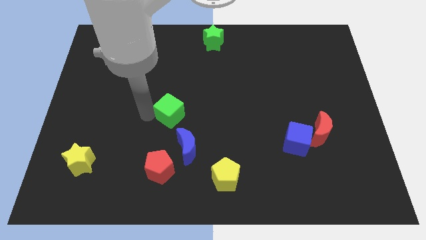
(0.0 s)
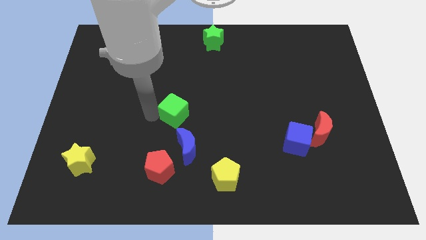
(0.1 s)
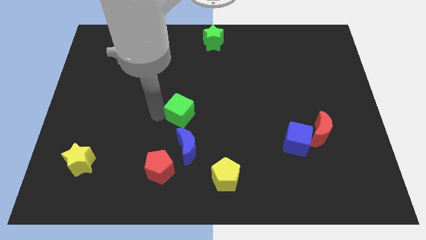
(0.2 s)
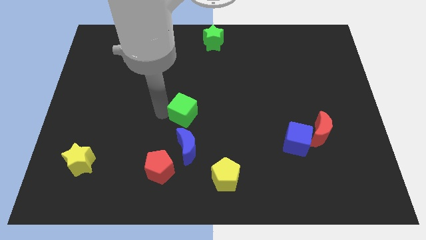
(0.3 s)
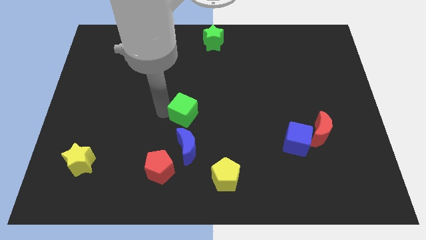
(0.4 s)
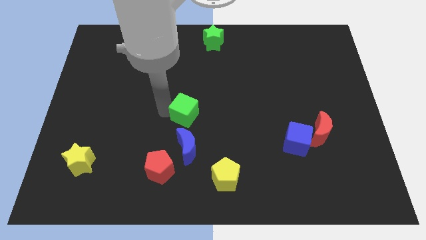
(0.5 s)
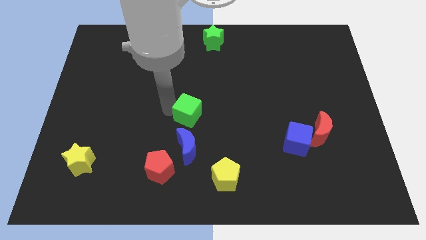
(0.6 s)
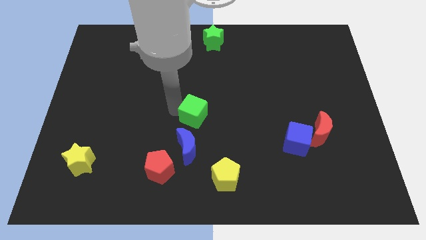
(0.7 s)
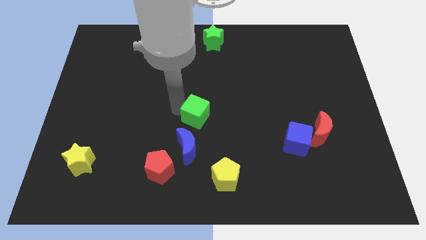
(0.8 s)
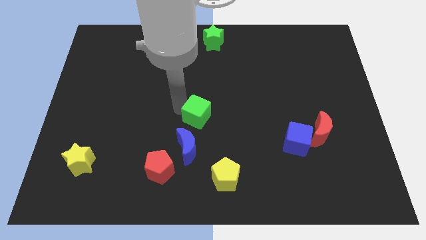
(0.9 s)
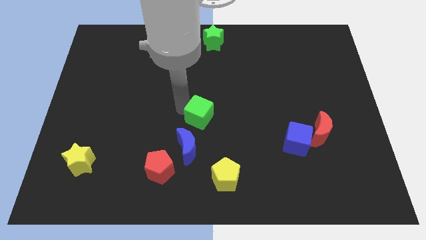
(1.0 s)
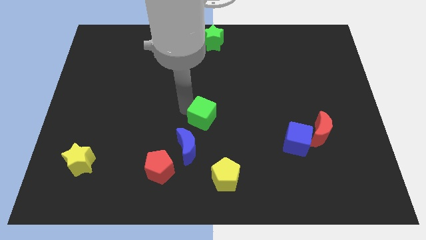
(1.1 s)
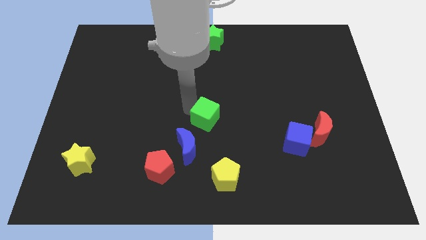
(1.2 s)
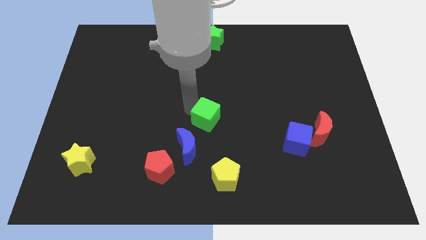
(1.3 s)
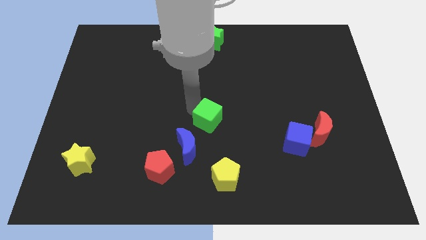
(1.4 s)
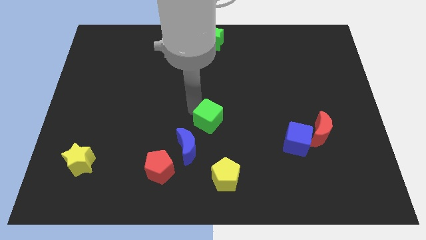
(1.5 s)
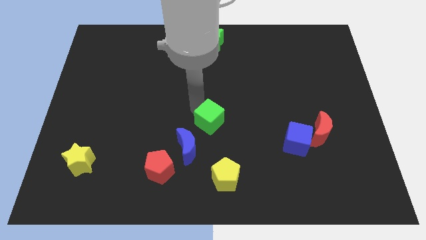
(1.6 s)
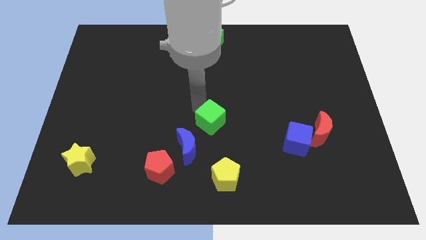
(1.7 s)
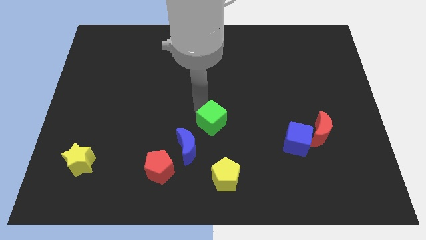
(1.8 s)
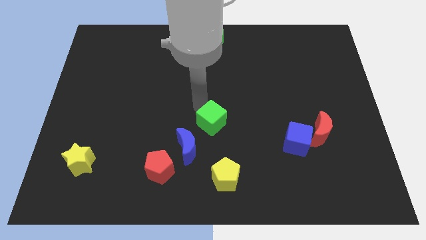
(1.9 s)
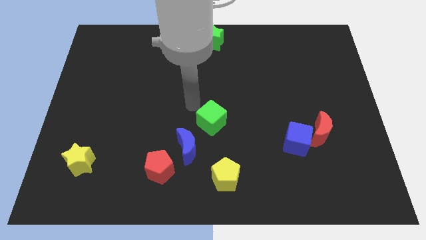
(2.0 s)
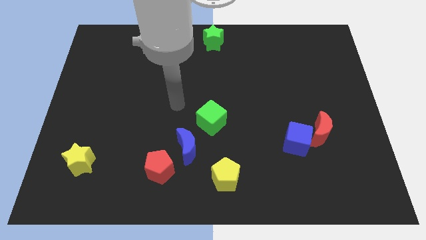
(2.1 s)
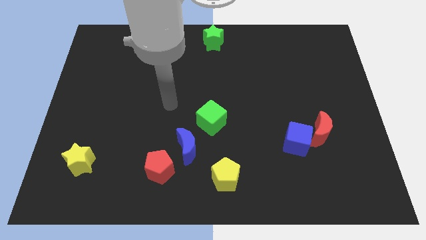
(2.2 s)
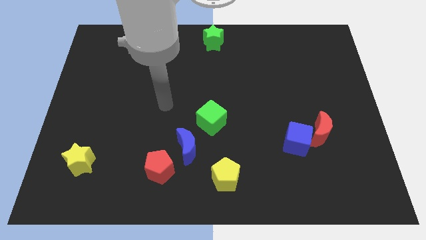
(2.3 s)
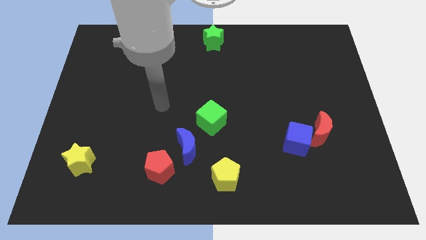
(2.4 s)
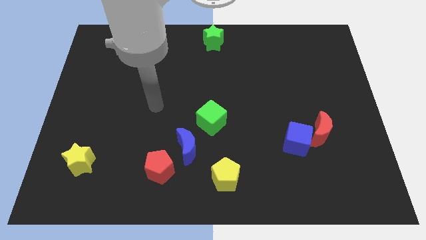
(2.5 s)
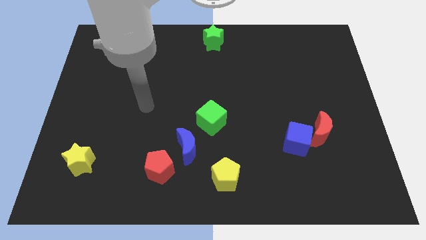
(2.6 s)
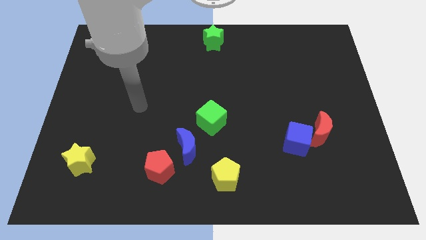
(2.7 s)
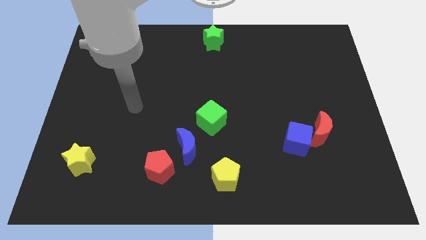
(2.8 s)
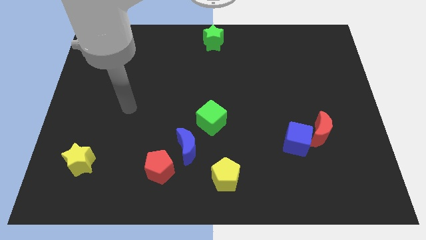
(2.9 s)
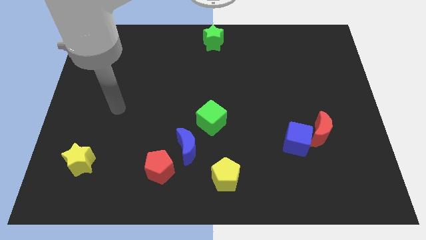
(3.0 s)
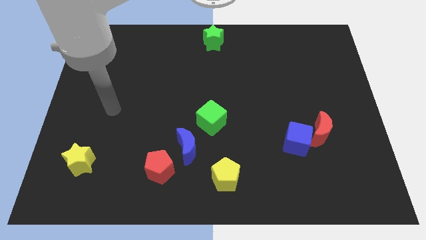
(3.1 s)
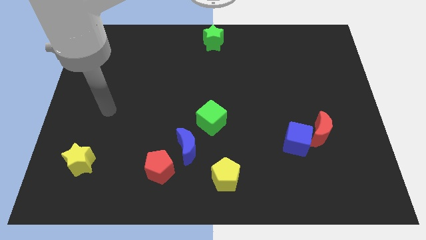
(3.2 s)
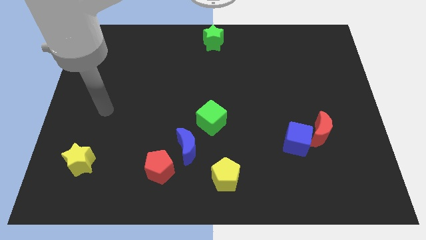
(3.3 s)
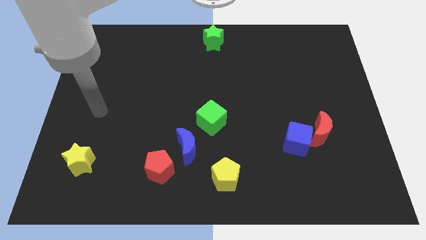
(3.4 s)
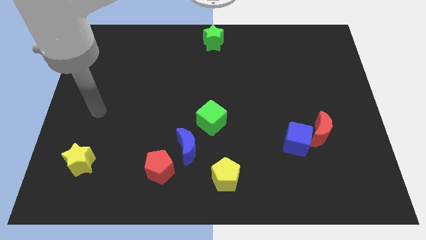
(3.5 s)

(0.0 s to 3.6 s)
push the green cube slightly to the right

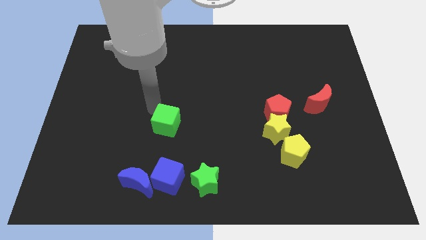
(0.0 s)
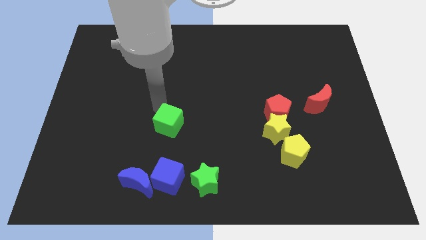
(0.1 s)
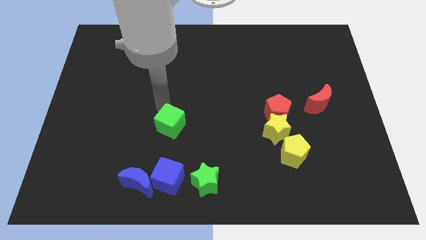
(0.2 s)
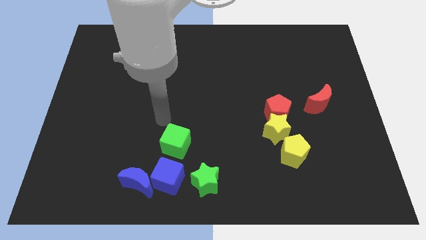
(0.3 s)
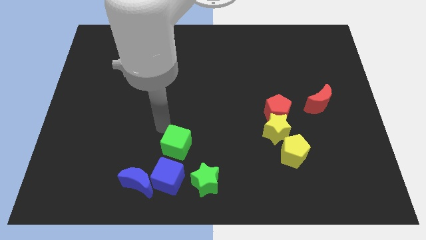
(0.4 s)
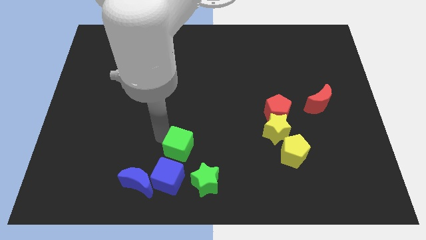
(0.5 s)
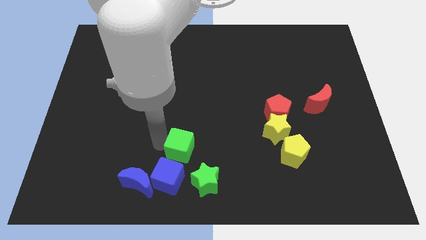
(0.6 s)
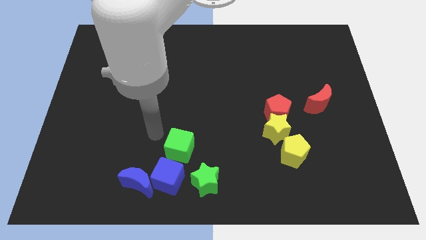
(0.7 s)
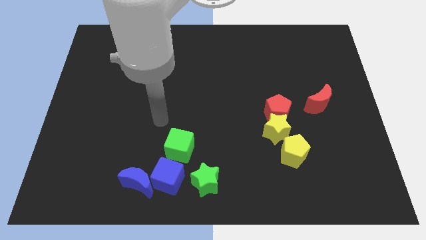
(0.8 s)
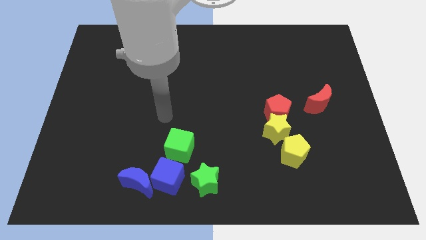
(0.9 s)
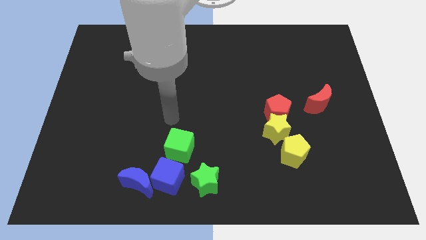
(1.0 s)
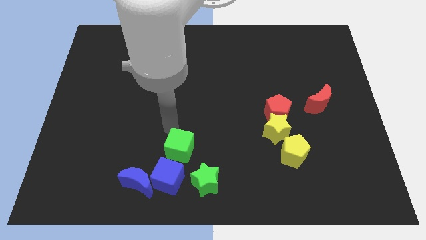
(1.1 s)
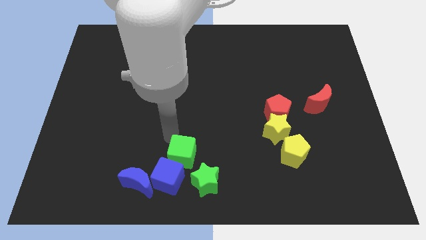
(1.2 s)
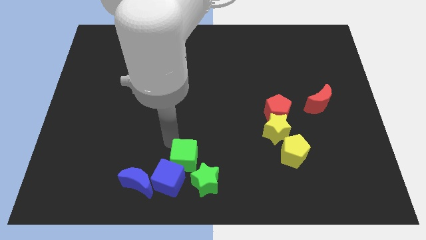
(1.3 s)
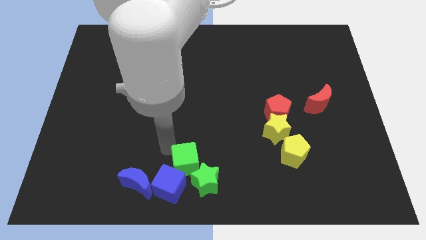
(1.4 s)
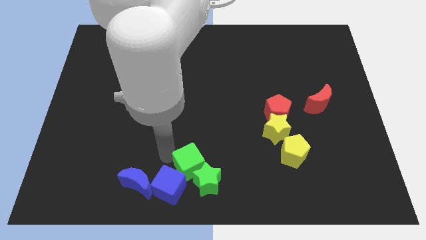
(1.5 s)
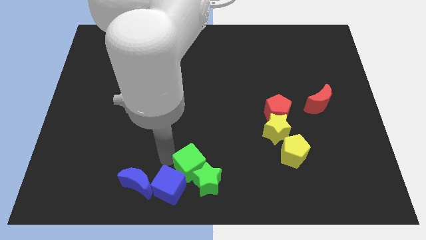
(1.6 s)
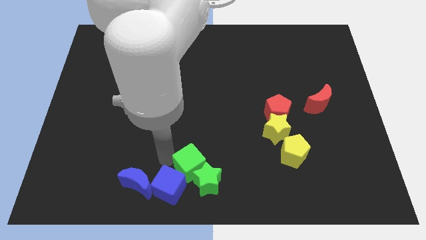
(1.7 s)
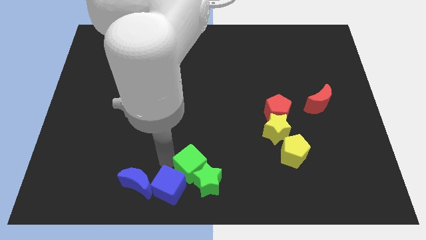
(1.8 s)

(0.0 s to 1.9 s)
push the green cube into the green star

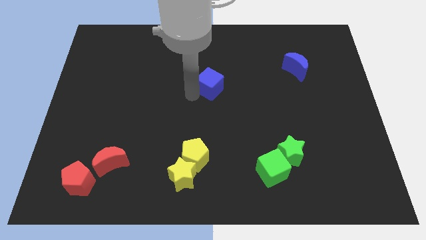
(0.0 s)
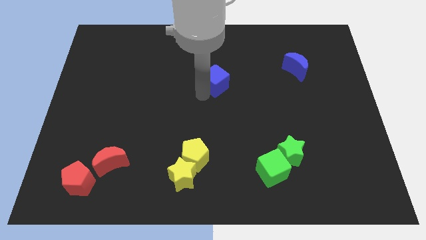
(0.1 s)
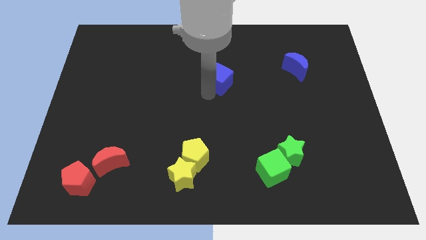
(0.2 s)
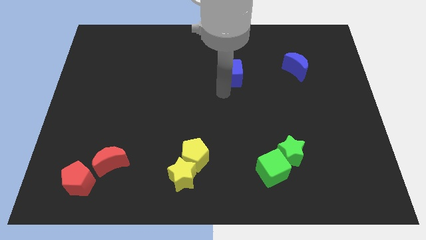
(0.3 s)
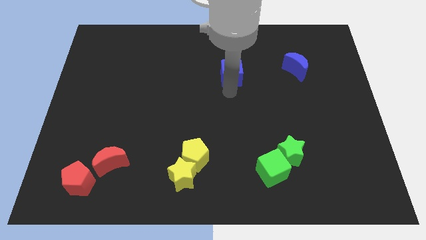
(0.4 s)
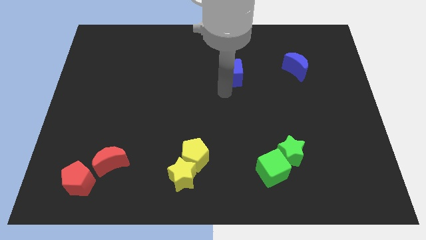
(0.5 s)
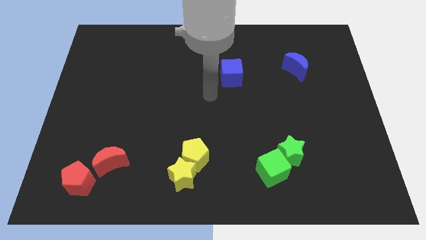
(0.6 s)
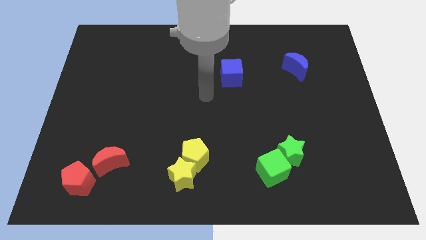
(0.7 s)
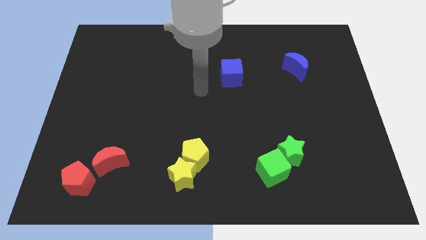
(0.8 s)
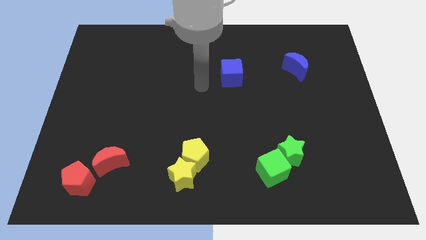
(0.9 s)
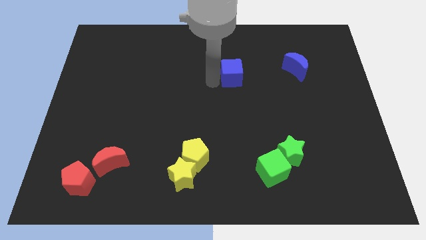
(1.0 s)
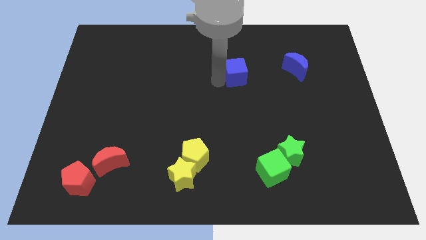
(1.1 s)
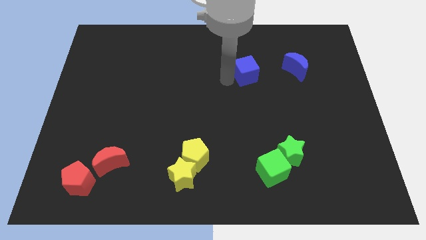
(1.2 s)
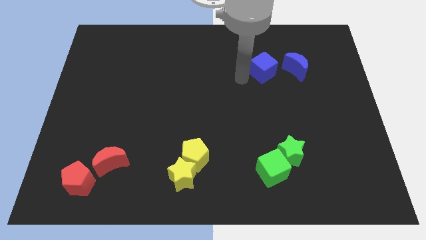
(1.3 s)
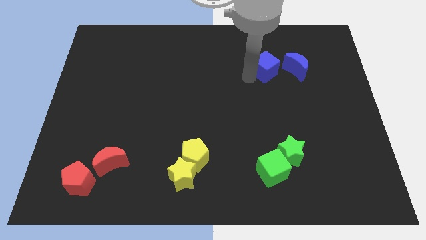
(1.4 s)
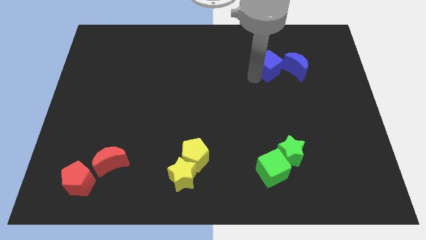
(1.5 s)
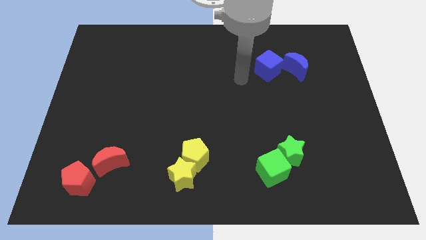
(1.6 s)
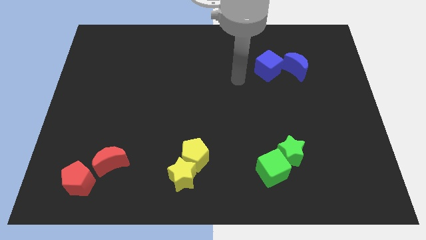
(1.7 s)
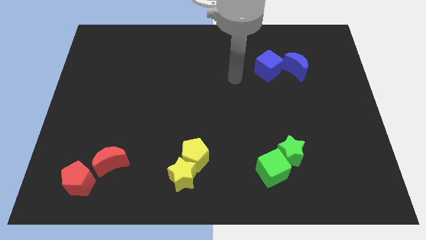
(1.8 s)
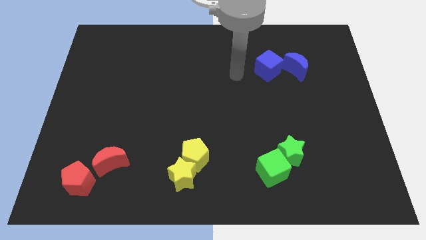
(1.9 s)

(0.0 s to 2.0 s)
place blue cube to the left of blue crescent

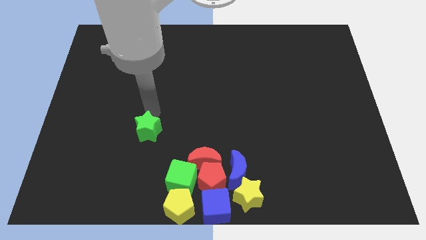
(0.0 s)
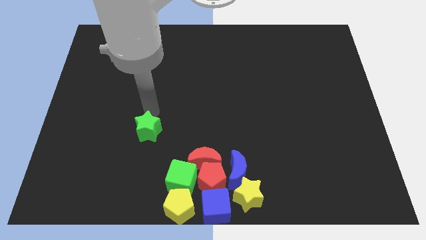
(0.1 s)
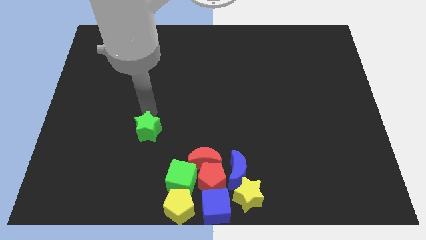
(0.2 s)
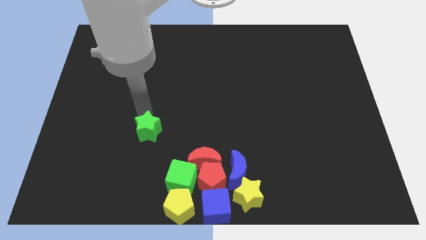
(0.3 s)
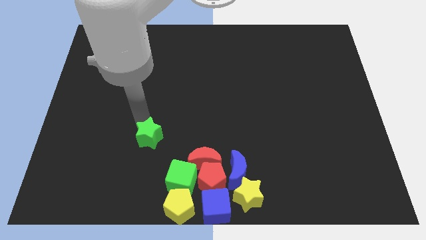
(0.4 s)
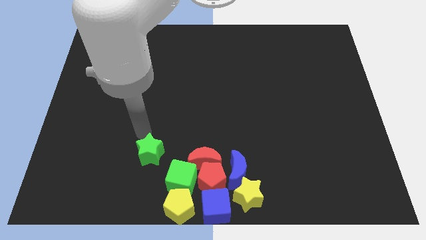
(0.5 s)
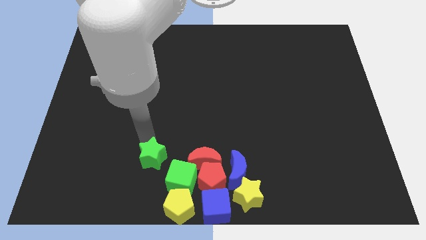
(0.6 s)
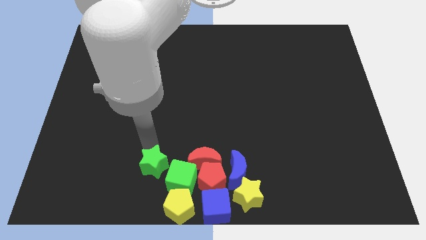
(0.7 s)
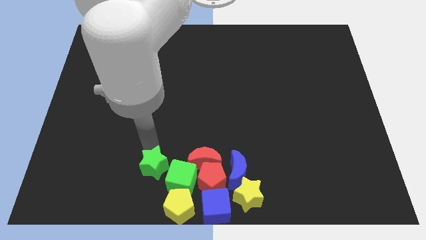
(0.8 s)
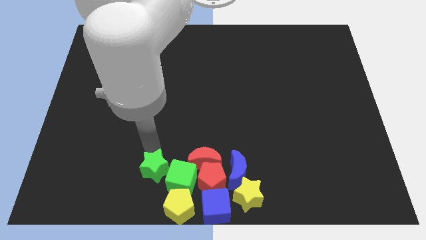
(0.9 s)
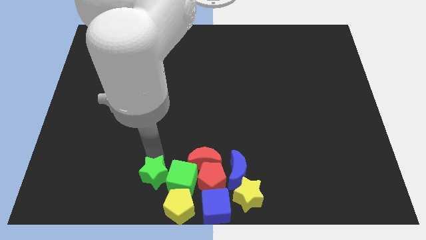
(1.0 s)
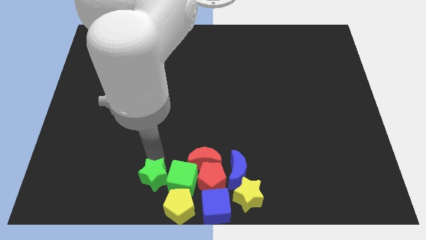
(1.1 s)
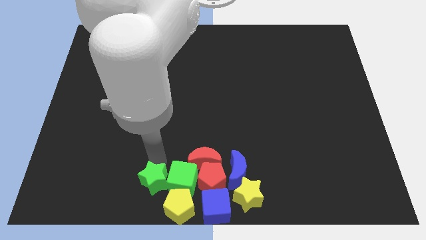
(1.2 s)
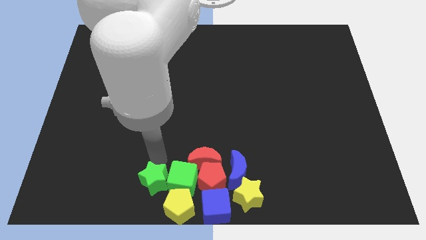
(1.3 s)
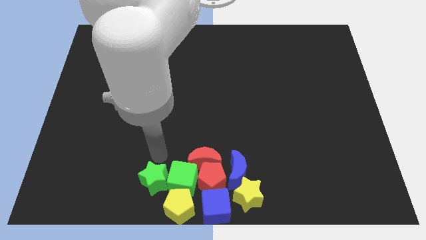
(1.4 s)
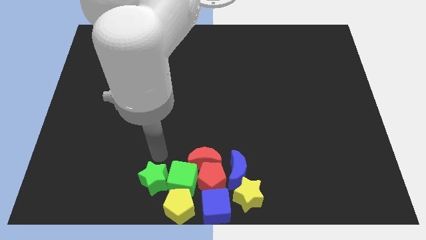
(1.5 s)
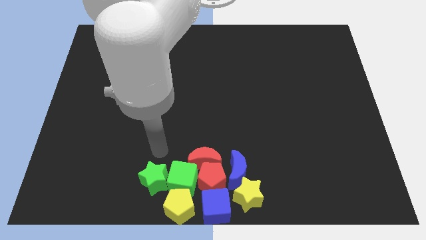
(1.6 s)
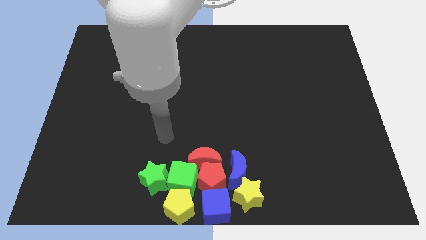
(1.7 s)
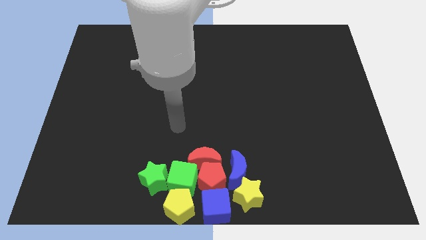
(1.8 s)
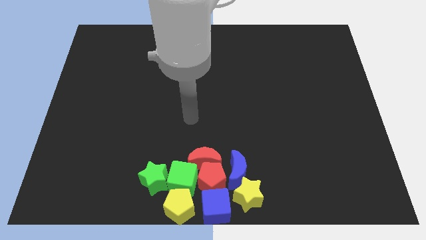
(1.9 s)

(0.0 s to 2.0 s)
place green star beside green cube
